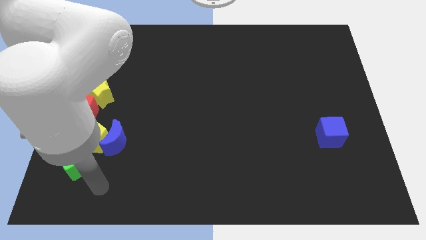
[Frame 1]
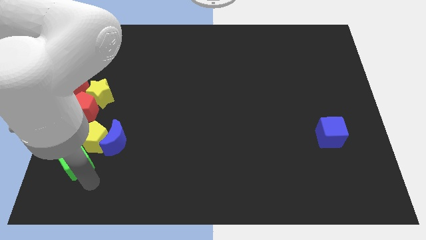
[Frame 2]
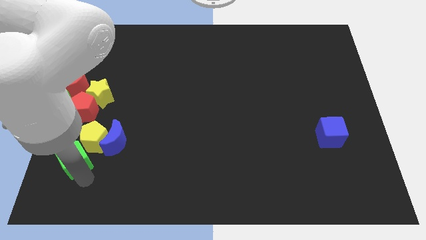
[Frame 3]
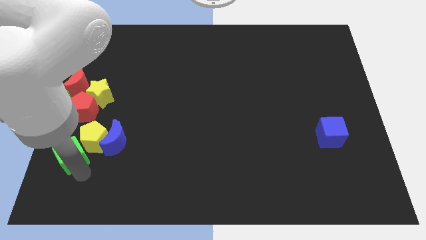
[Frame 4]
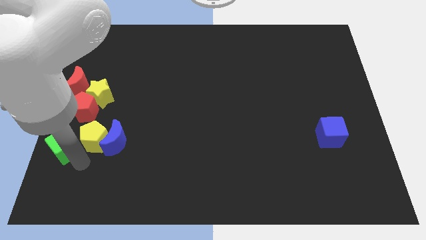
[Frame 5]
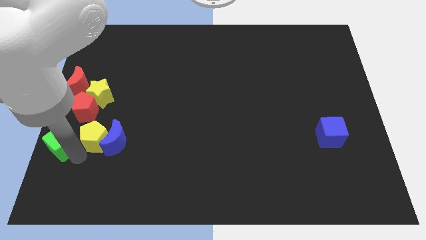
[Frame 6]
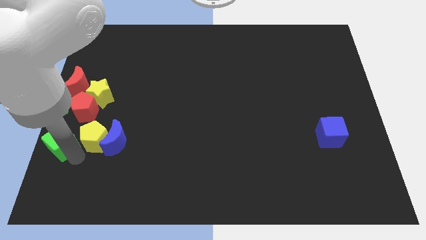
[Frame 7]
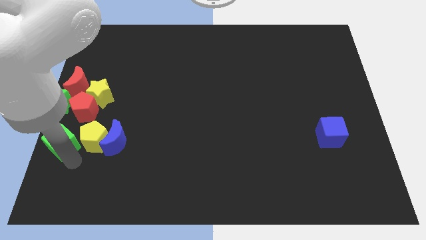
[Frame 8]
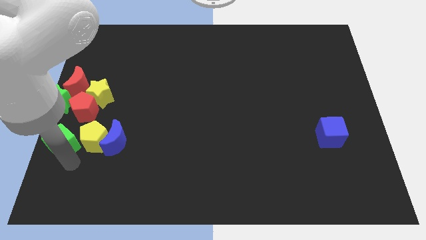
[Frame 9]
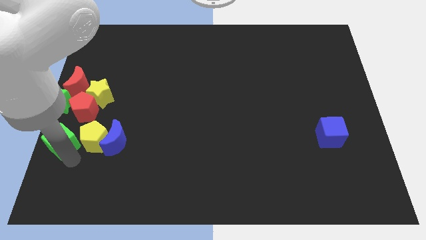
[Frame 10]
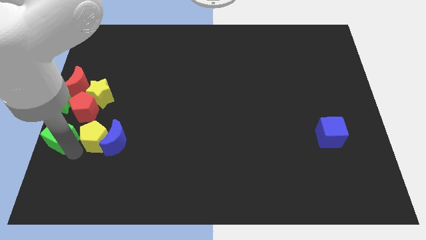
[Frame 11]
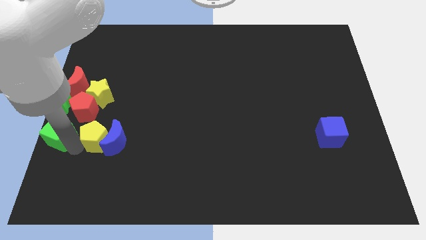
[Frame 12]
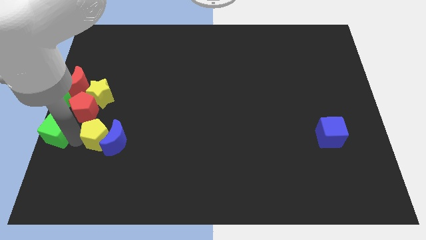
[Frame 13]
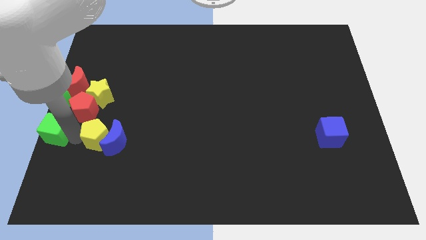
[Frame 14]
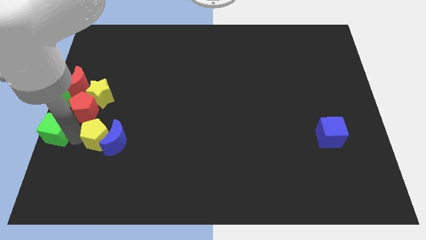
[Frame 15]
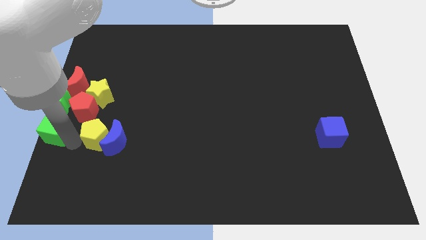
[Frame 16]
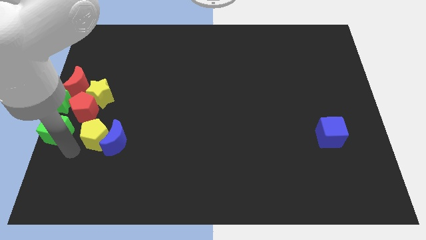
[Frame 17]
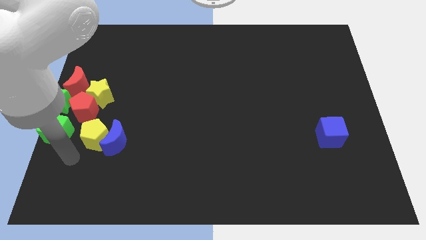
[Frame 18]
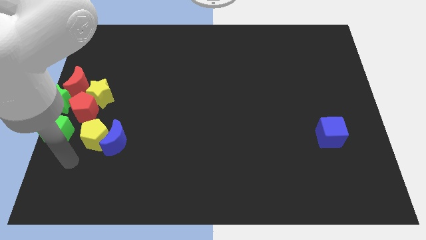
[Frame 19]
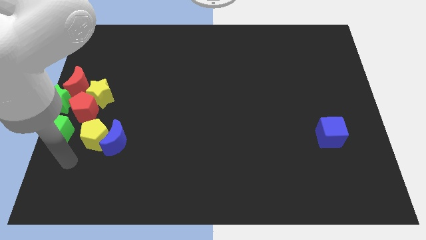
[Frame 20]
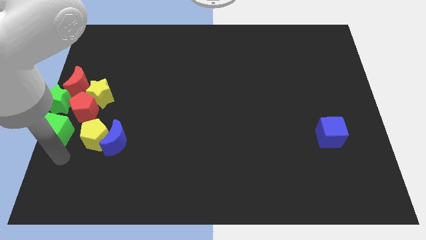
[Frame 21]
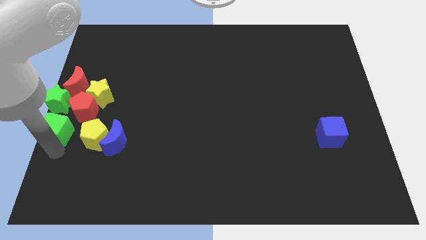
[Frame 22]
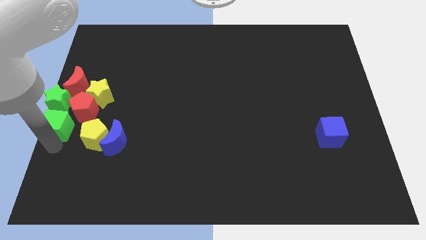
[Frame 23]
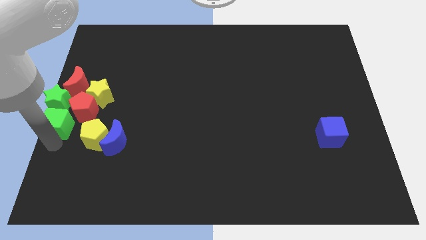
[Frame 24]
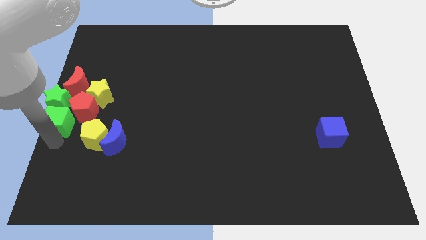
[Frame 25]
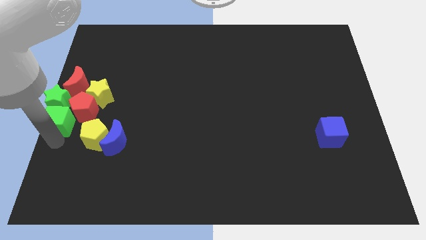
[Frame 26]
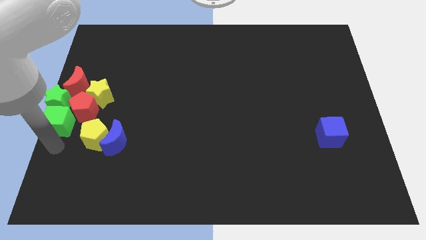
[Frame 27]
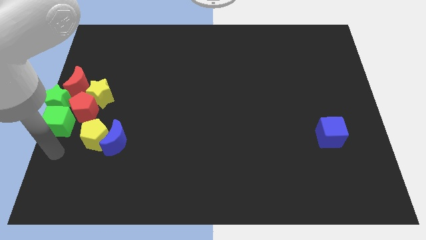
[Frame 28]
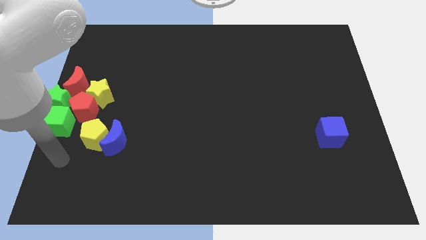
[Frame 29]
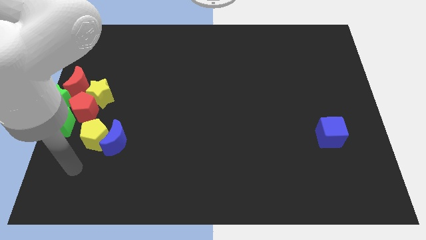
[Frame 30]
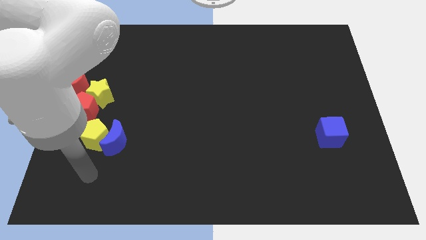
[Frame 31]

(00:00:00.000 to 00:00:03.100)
move the green cube into green star

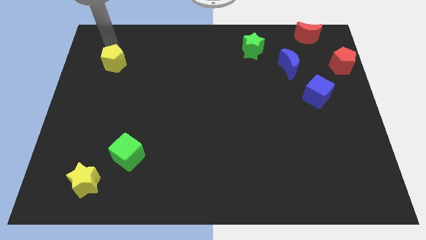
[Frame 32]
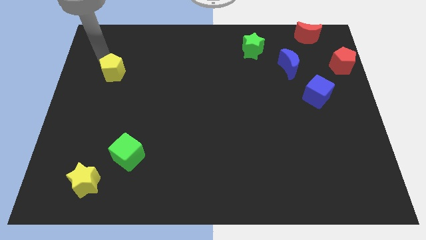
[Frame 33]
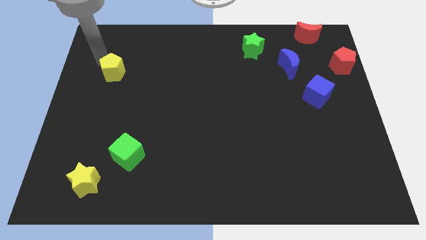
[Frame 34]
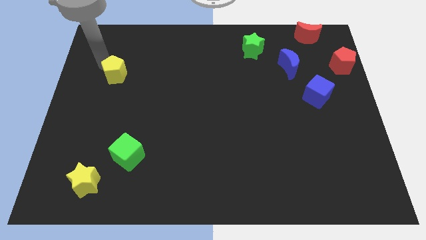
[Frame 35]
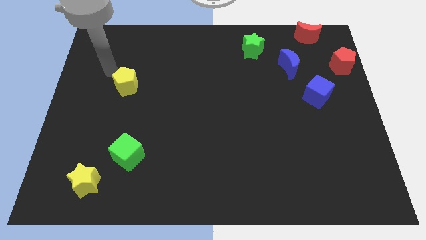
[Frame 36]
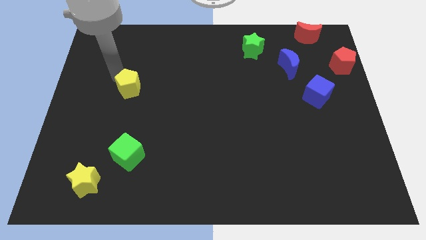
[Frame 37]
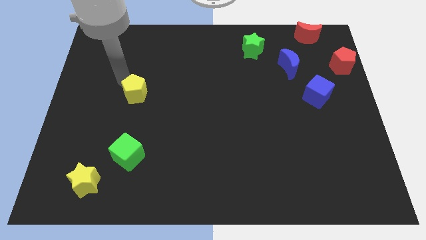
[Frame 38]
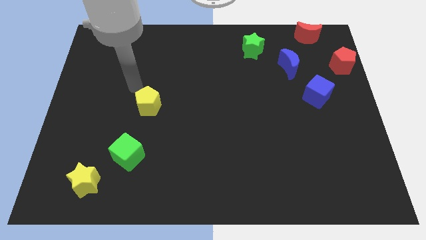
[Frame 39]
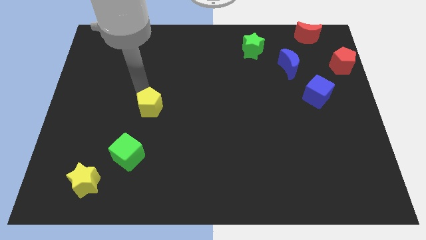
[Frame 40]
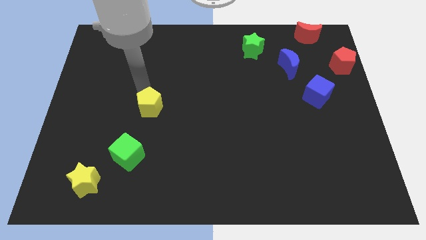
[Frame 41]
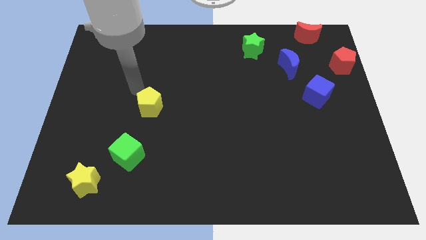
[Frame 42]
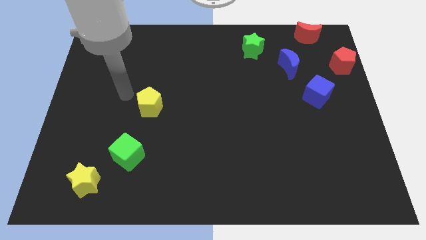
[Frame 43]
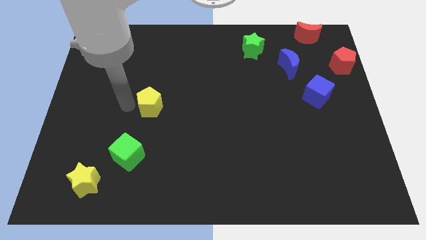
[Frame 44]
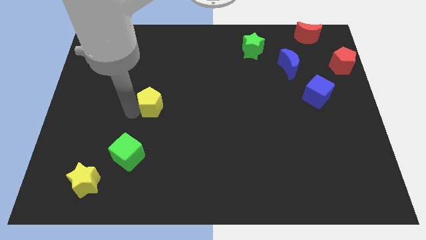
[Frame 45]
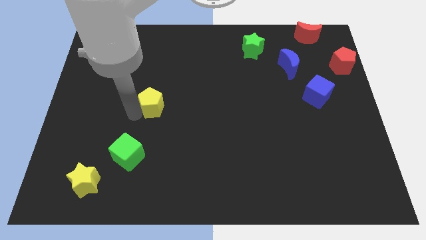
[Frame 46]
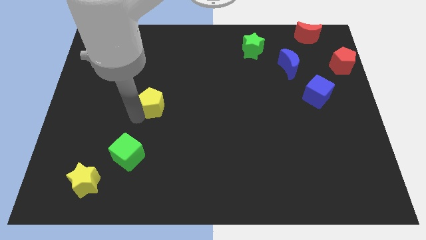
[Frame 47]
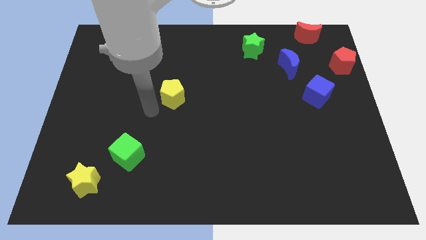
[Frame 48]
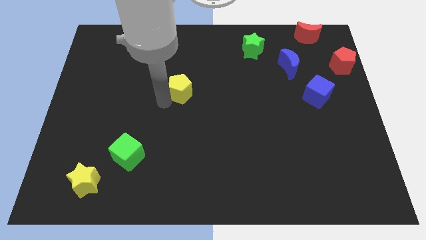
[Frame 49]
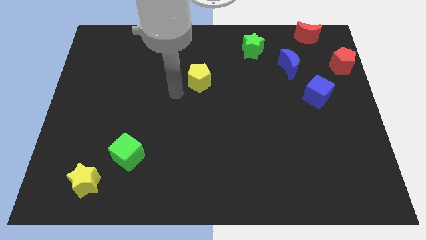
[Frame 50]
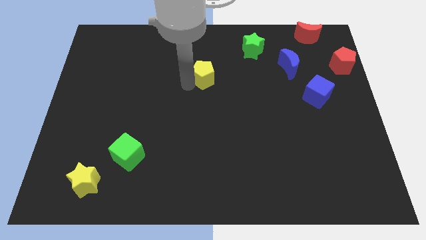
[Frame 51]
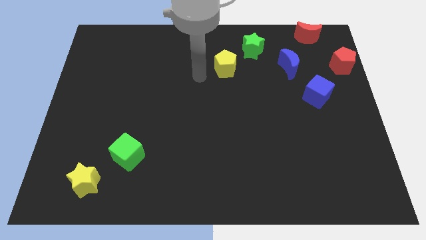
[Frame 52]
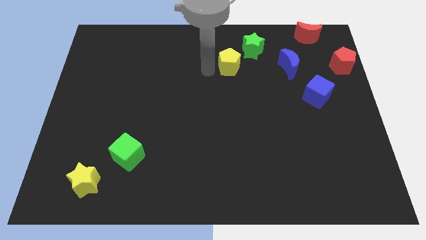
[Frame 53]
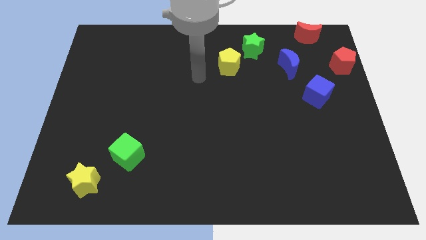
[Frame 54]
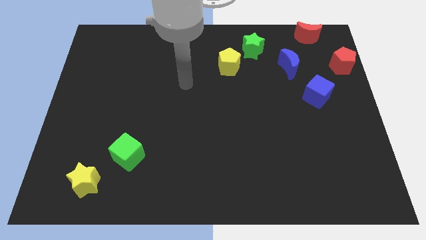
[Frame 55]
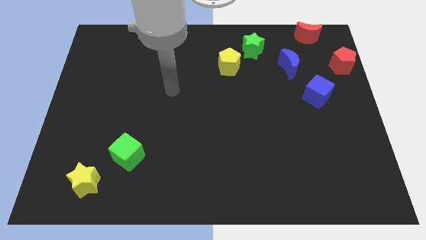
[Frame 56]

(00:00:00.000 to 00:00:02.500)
push the yellow star to the bottom left side of the green star

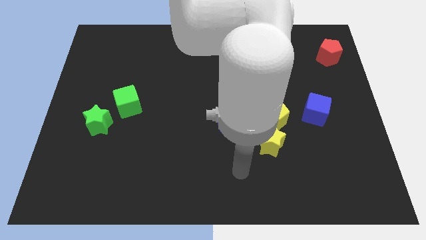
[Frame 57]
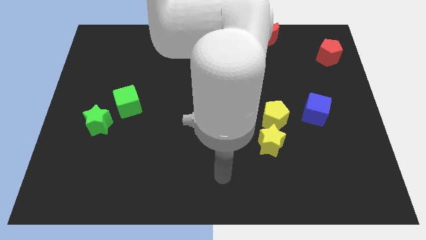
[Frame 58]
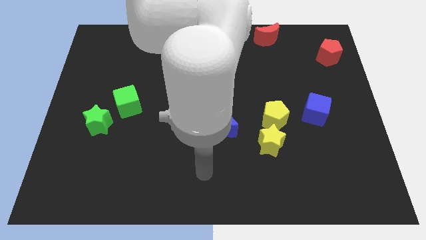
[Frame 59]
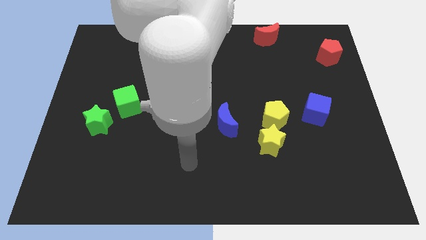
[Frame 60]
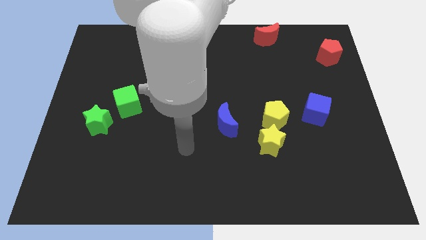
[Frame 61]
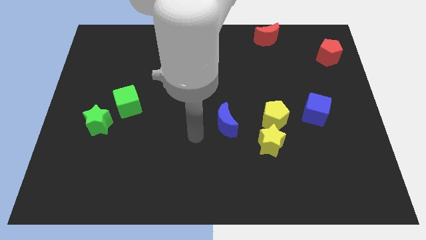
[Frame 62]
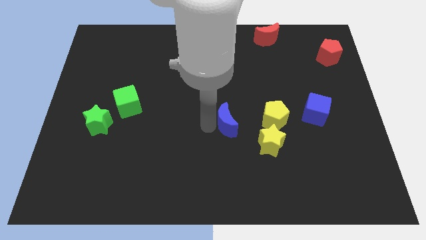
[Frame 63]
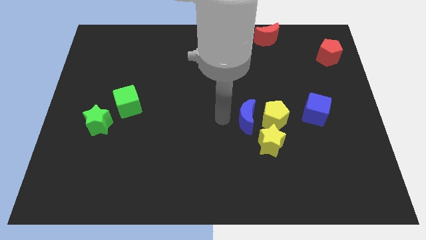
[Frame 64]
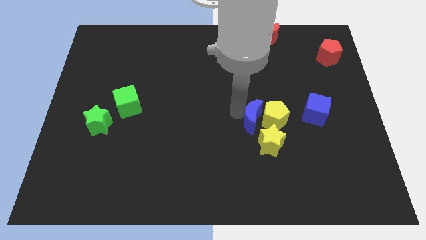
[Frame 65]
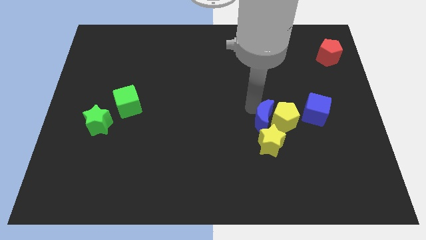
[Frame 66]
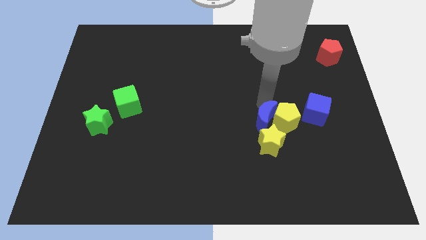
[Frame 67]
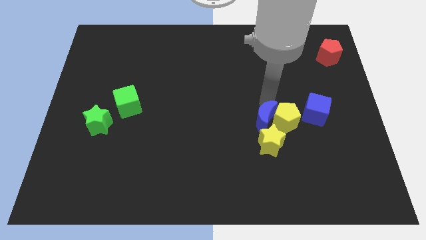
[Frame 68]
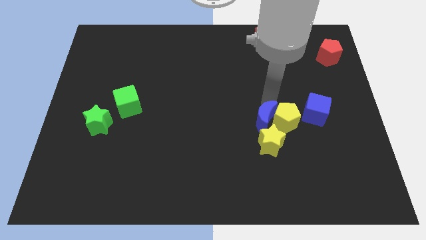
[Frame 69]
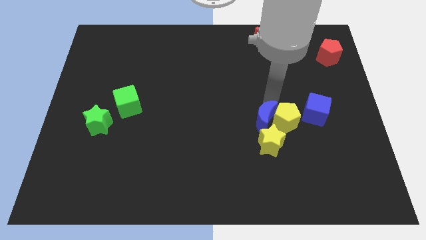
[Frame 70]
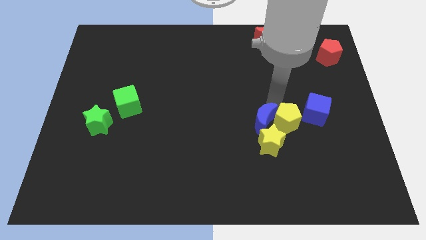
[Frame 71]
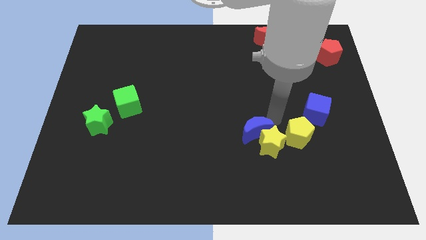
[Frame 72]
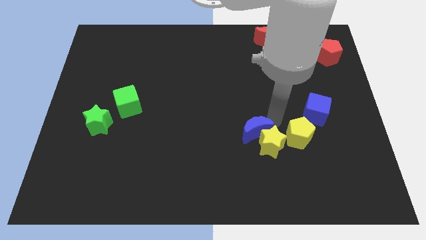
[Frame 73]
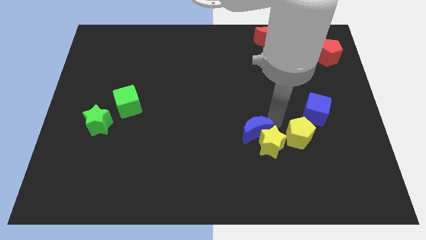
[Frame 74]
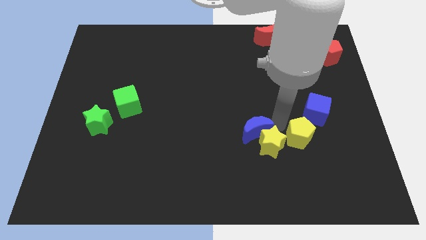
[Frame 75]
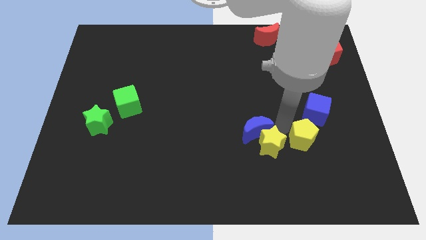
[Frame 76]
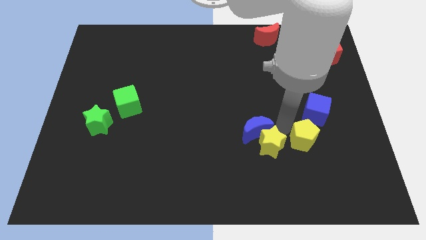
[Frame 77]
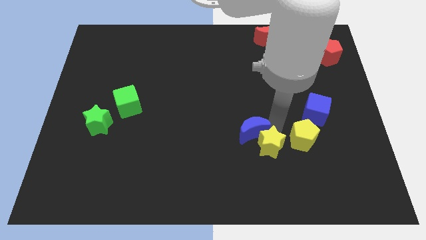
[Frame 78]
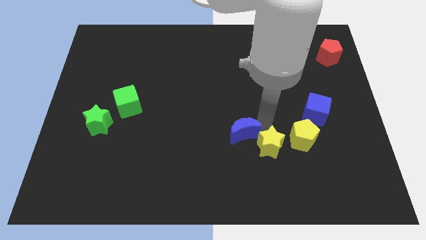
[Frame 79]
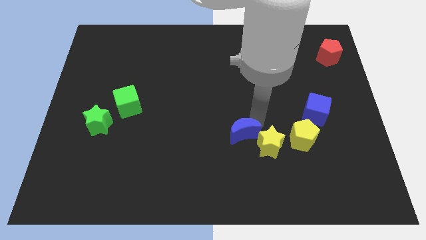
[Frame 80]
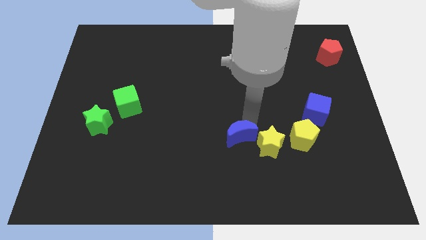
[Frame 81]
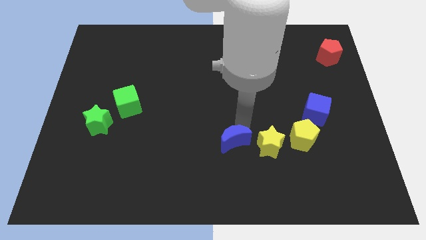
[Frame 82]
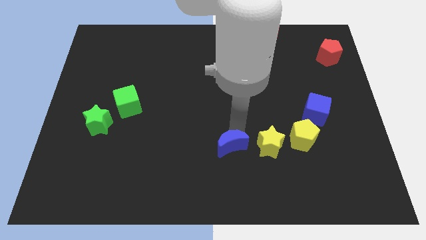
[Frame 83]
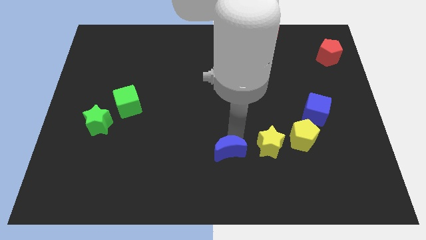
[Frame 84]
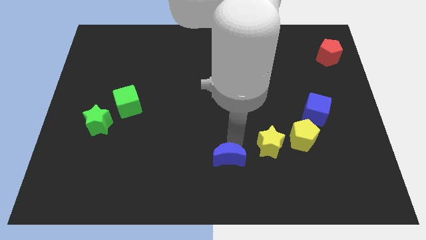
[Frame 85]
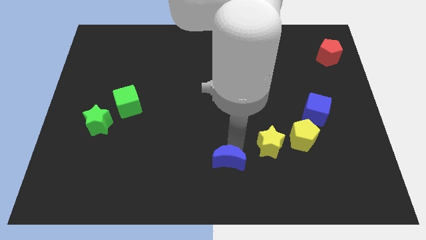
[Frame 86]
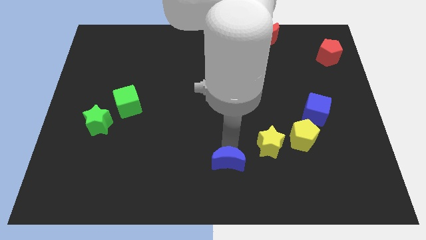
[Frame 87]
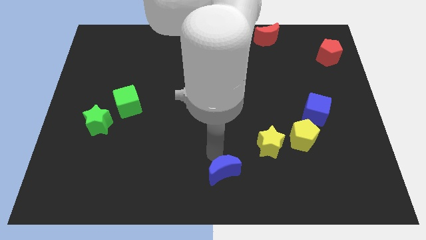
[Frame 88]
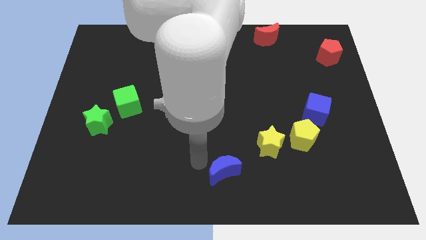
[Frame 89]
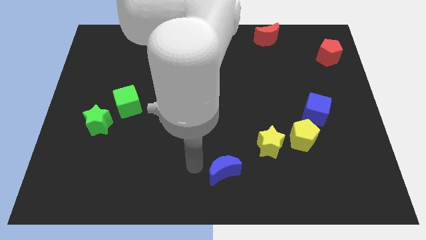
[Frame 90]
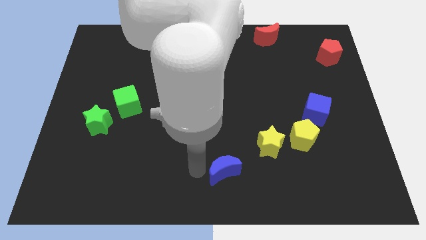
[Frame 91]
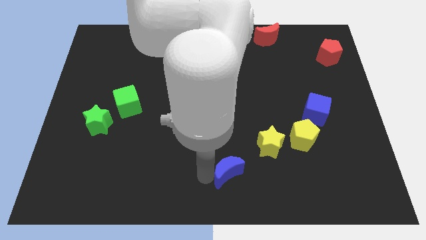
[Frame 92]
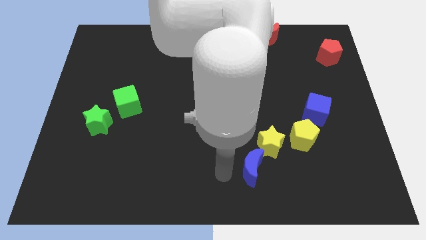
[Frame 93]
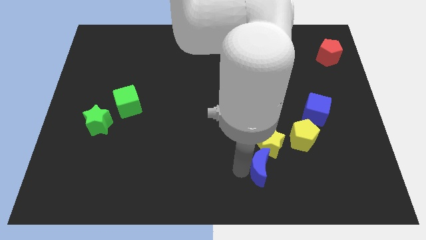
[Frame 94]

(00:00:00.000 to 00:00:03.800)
push the blue crescent to the bottom of the yellow star
